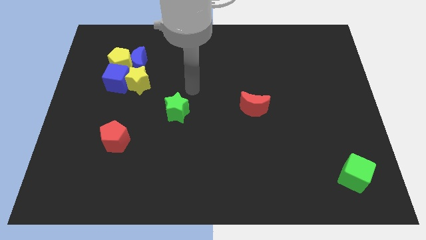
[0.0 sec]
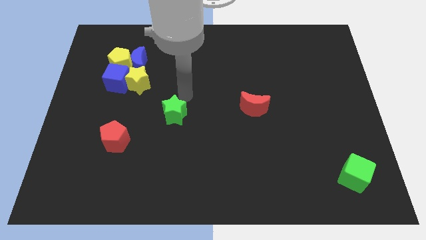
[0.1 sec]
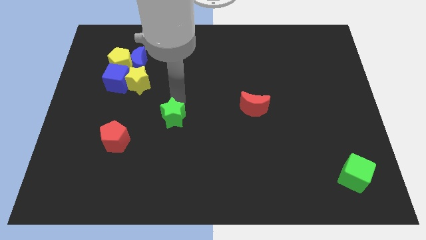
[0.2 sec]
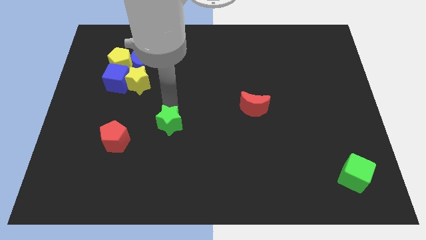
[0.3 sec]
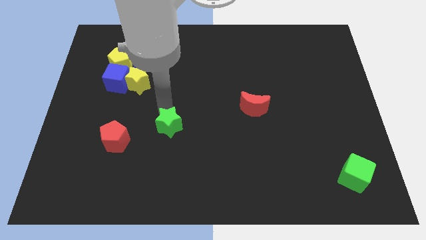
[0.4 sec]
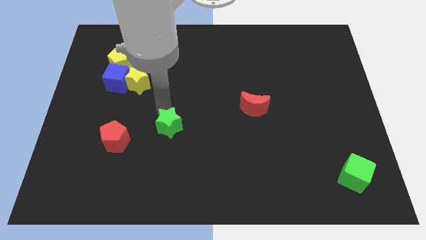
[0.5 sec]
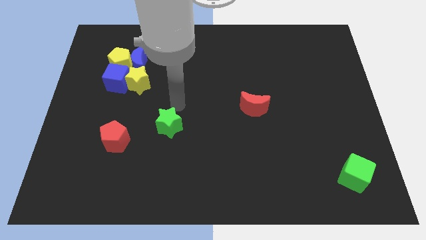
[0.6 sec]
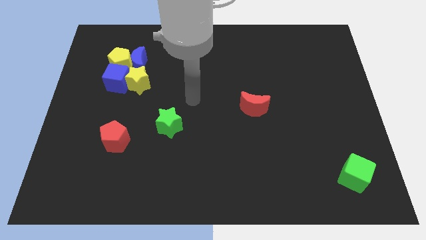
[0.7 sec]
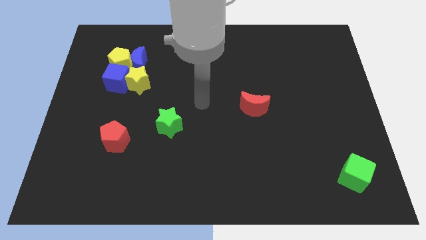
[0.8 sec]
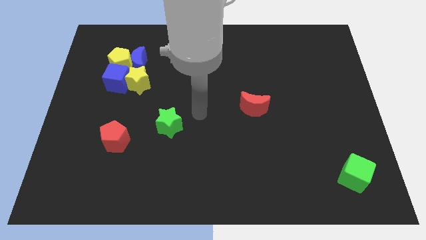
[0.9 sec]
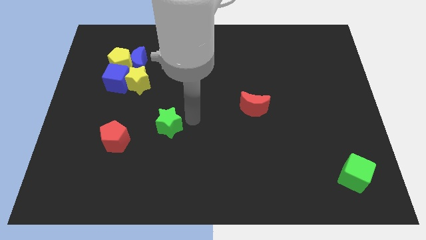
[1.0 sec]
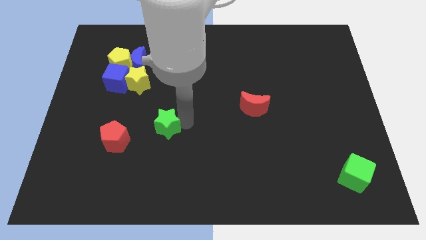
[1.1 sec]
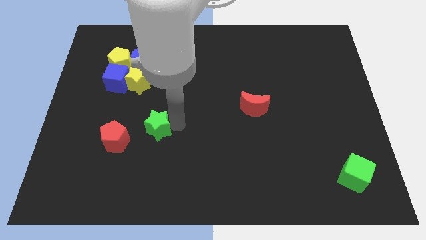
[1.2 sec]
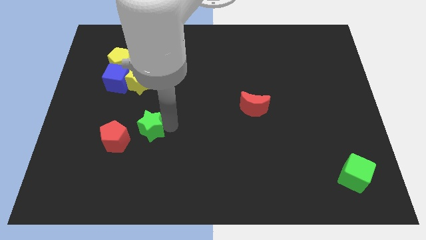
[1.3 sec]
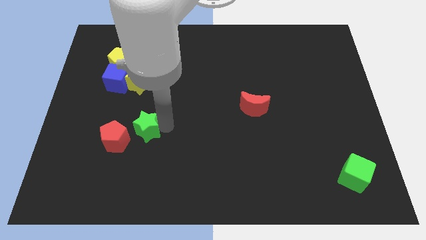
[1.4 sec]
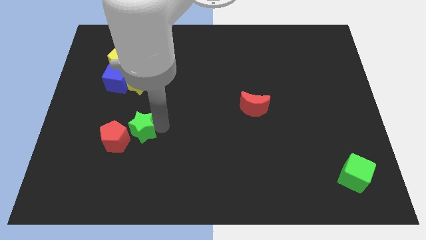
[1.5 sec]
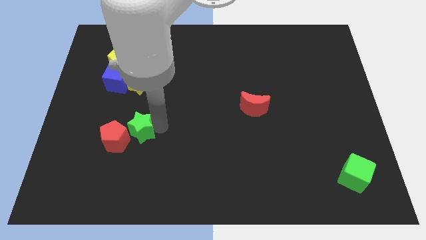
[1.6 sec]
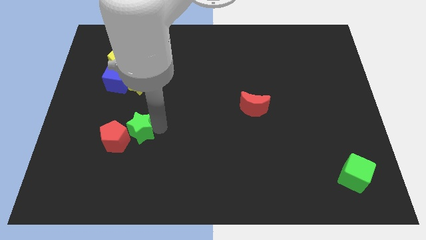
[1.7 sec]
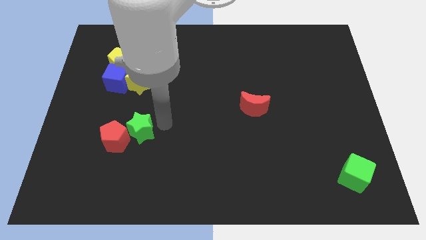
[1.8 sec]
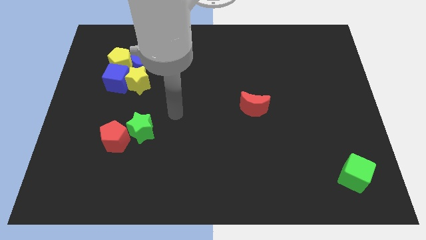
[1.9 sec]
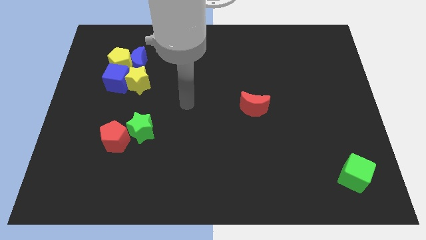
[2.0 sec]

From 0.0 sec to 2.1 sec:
slide green star into red pentagon

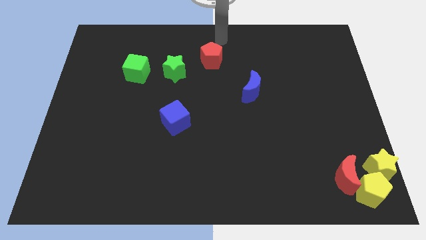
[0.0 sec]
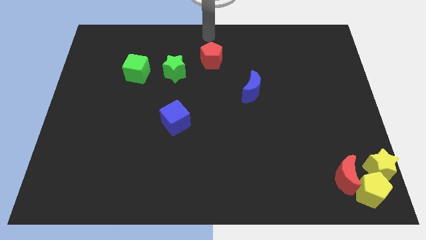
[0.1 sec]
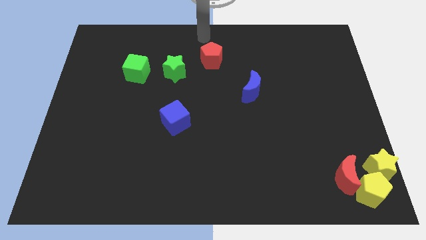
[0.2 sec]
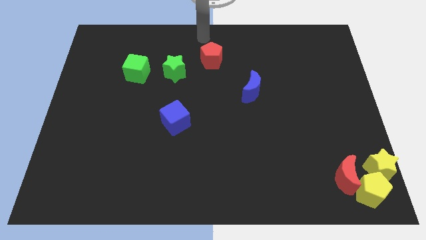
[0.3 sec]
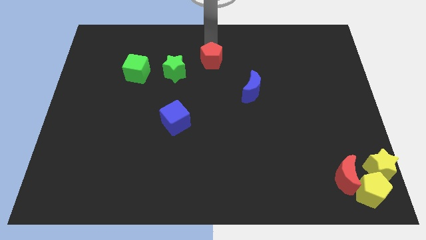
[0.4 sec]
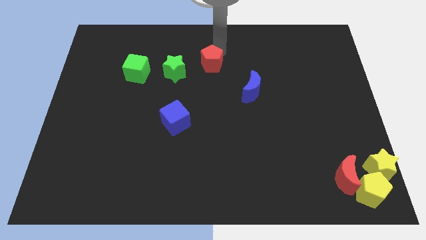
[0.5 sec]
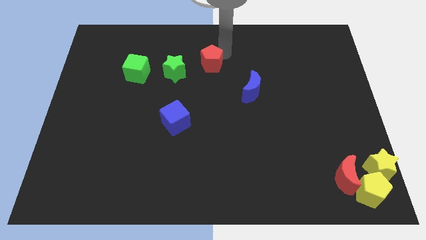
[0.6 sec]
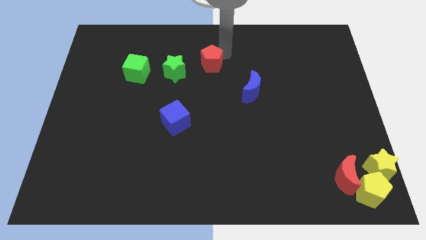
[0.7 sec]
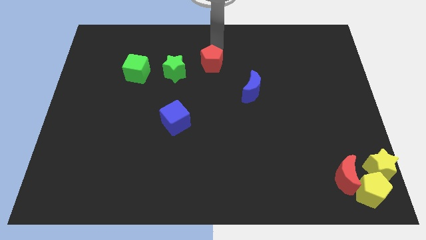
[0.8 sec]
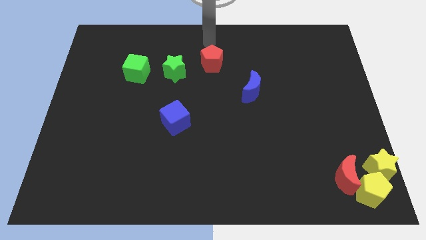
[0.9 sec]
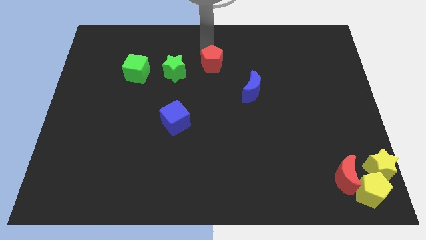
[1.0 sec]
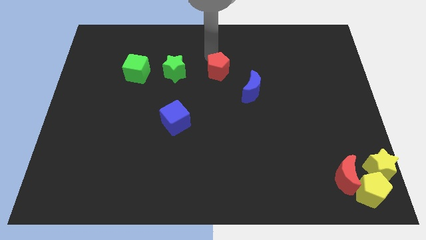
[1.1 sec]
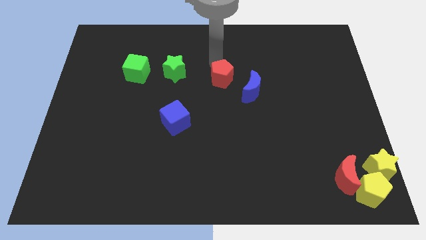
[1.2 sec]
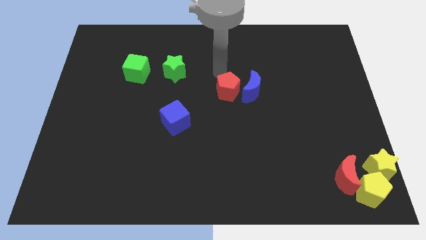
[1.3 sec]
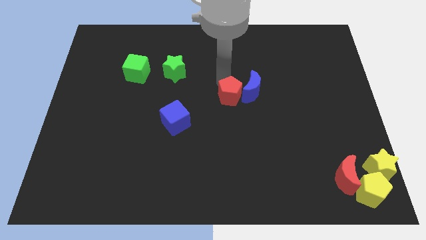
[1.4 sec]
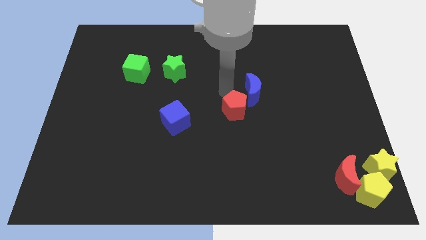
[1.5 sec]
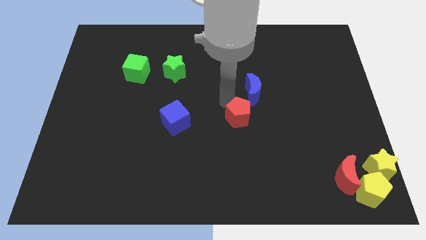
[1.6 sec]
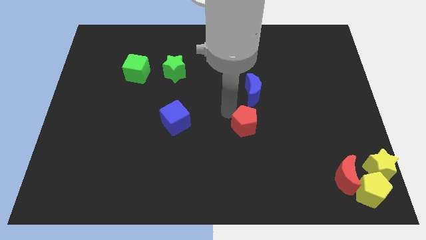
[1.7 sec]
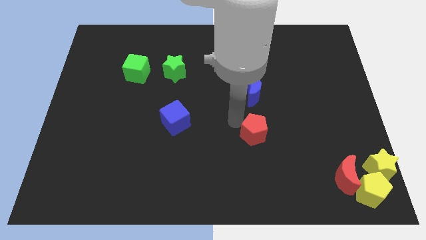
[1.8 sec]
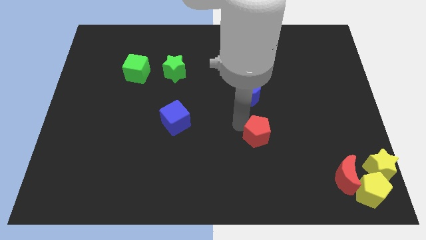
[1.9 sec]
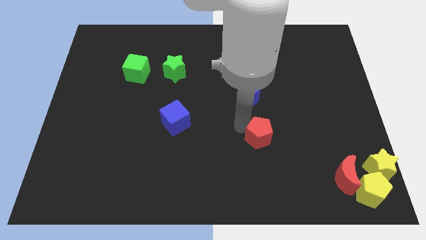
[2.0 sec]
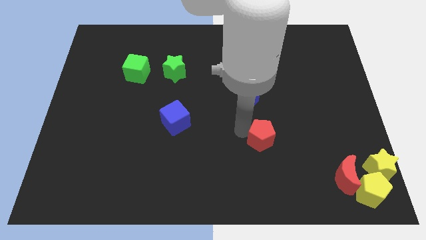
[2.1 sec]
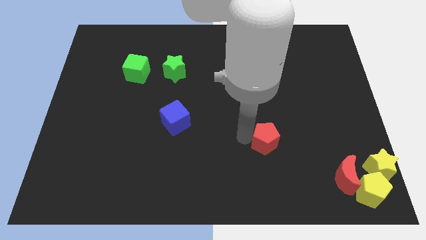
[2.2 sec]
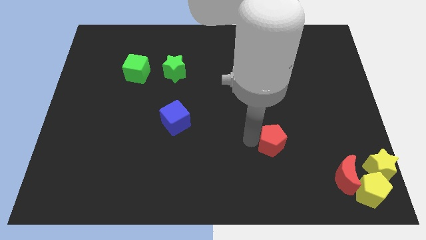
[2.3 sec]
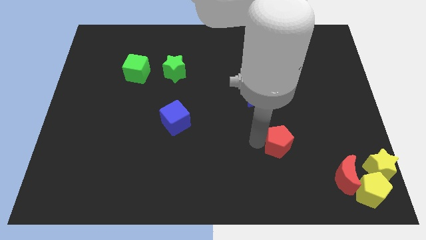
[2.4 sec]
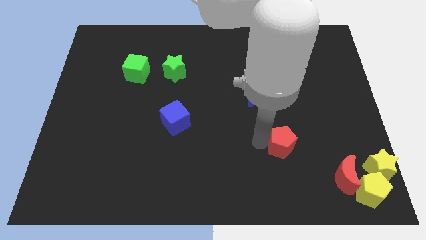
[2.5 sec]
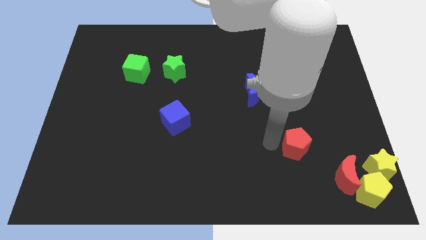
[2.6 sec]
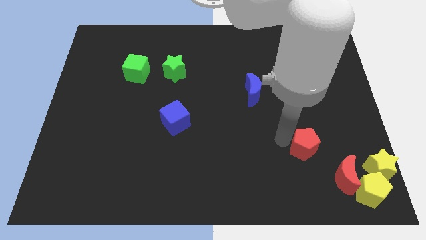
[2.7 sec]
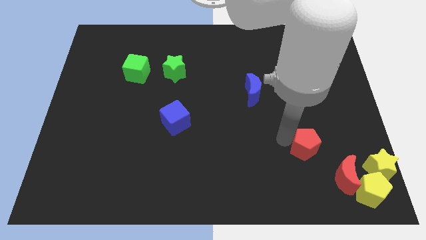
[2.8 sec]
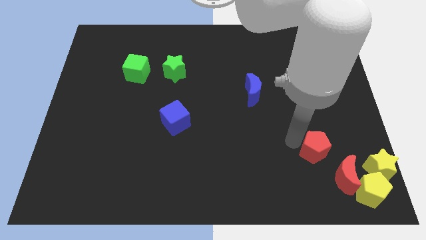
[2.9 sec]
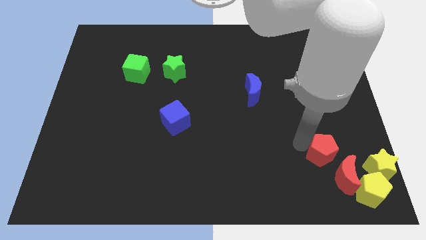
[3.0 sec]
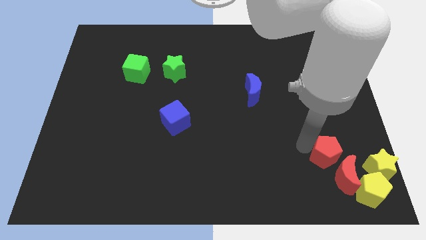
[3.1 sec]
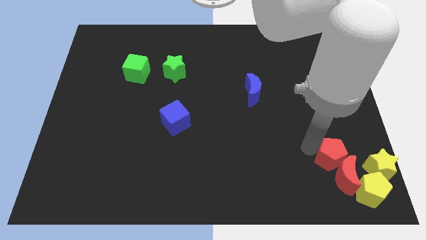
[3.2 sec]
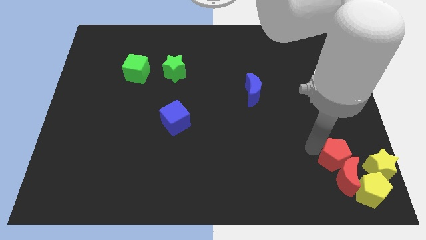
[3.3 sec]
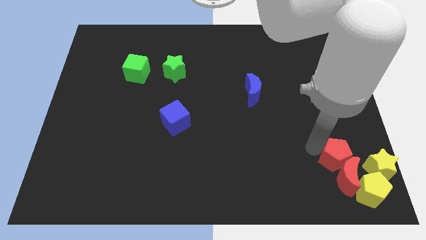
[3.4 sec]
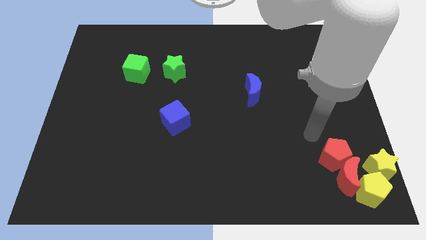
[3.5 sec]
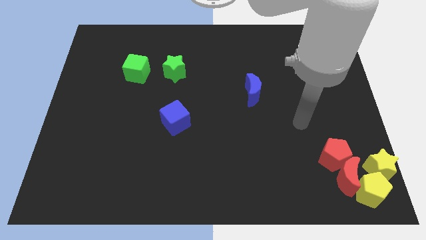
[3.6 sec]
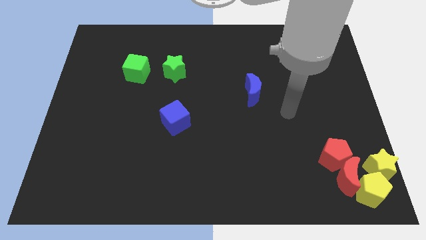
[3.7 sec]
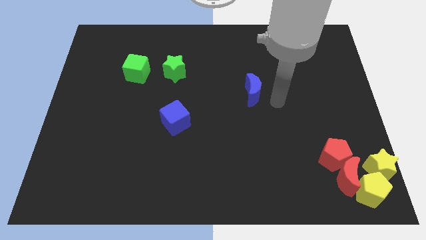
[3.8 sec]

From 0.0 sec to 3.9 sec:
move the red pentagon into the red moon

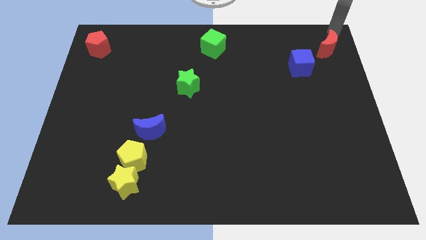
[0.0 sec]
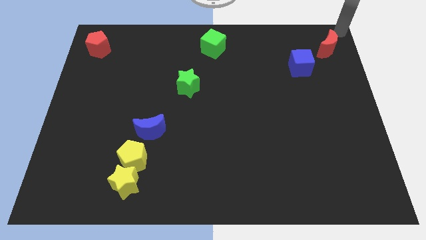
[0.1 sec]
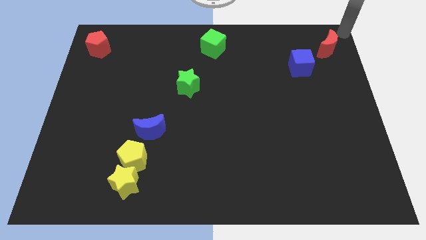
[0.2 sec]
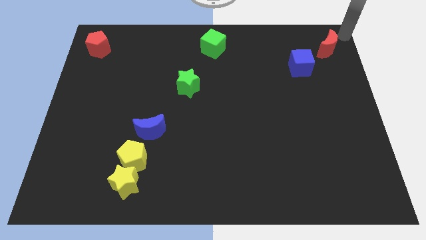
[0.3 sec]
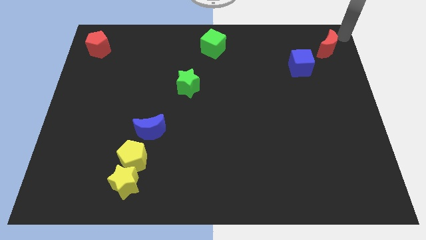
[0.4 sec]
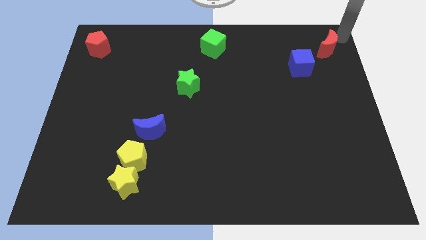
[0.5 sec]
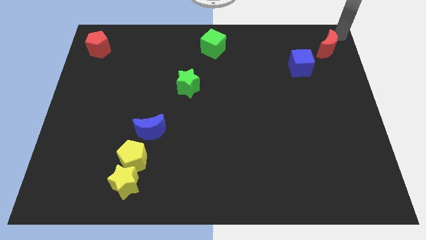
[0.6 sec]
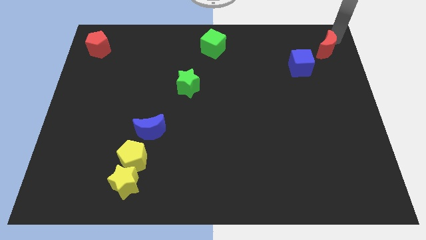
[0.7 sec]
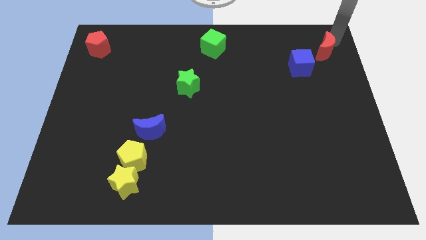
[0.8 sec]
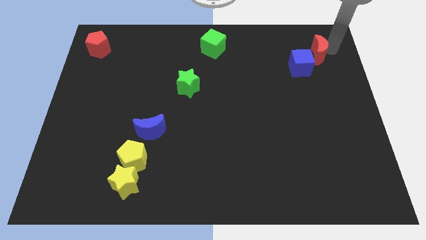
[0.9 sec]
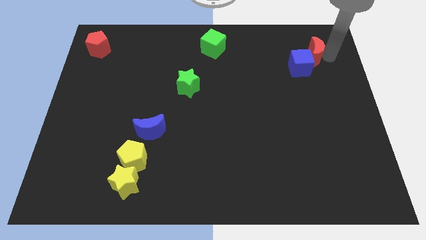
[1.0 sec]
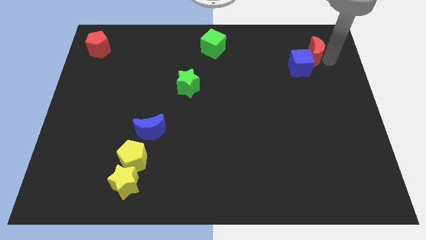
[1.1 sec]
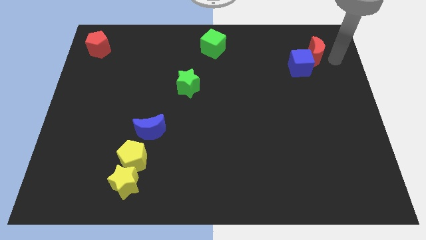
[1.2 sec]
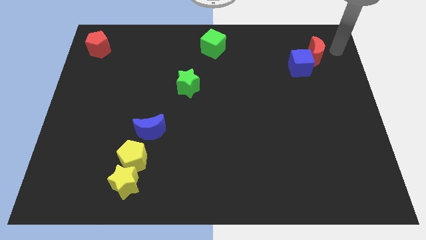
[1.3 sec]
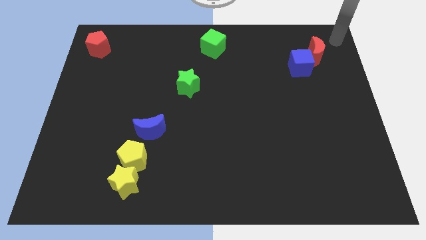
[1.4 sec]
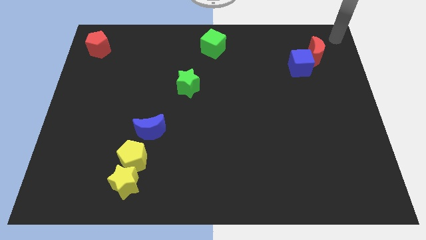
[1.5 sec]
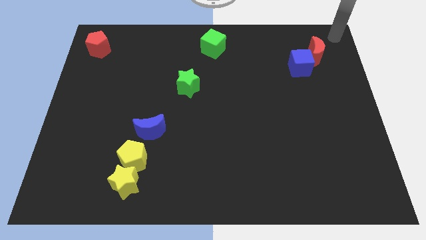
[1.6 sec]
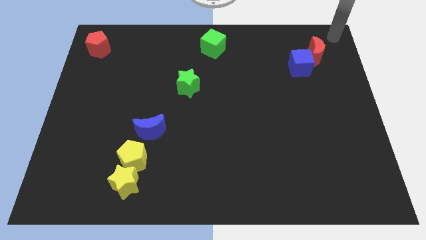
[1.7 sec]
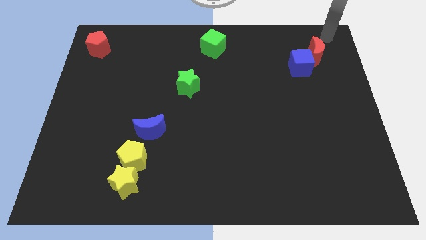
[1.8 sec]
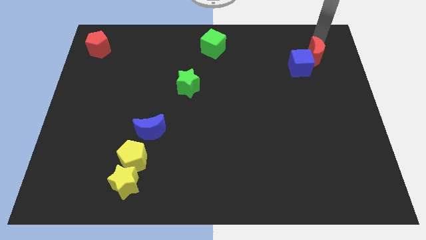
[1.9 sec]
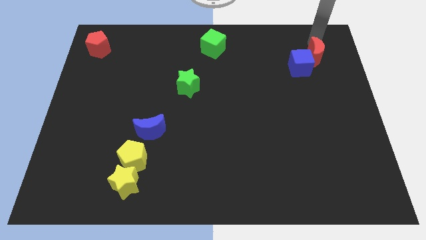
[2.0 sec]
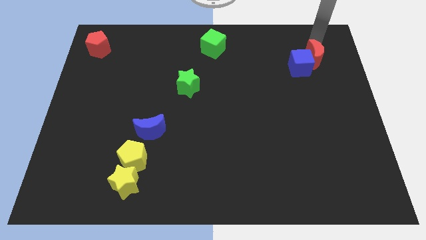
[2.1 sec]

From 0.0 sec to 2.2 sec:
slide the red moon at the top right side of the blue cube

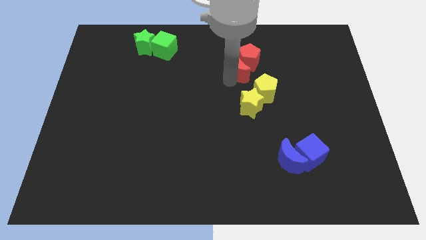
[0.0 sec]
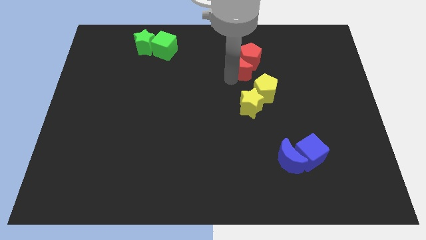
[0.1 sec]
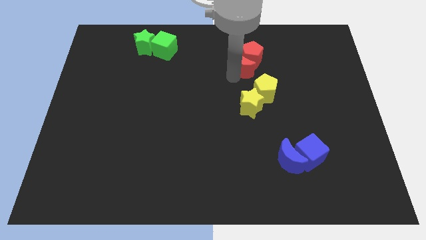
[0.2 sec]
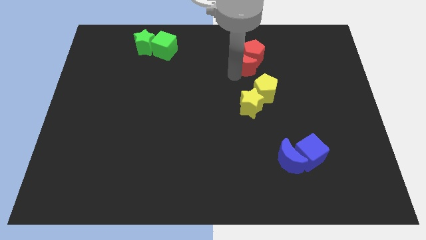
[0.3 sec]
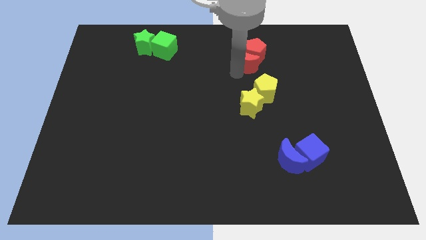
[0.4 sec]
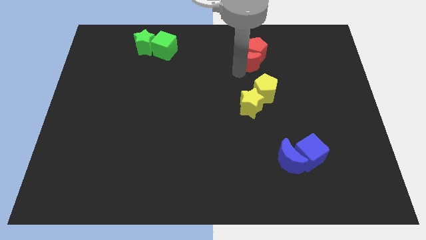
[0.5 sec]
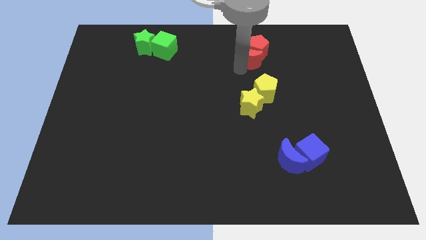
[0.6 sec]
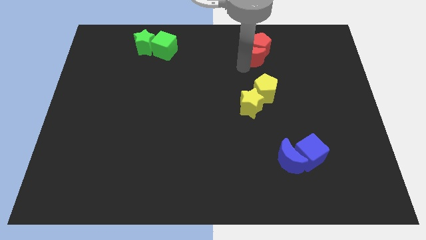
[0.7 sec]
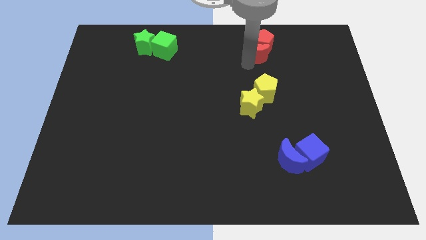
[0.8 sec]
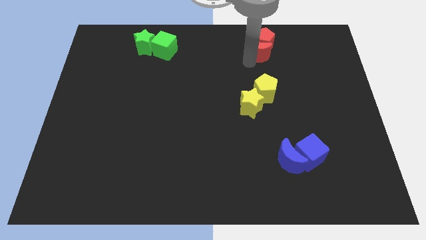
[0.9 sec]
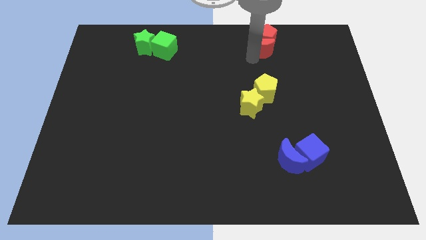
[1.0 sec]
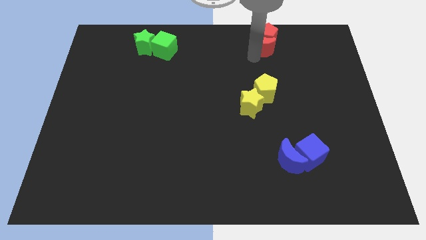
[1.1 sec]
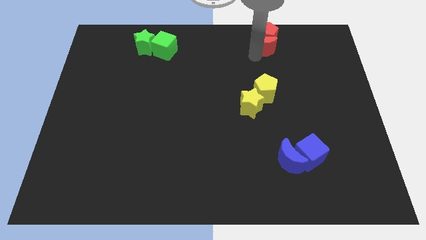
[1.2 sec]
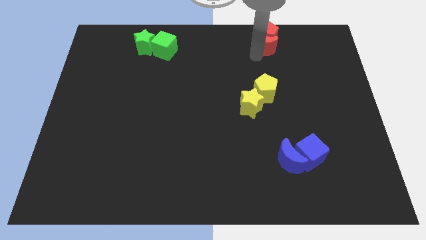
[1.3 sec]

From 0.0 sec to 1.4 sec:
drag the red moon and red pentagon towards top center of the board
